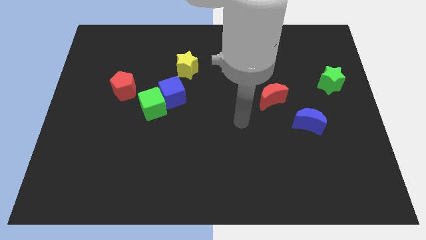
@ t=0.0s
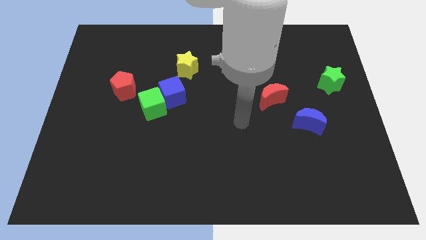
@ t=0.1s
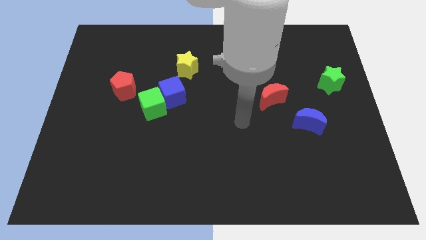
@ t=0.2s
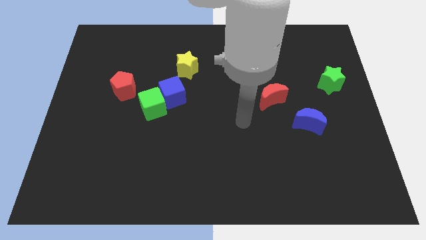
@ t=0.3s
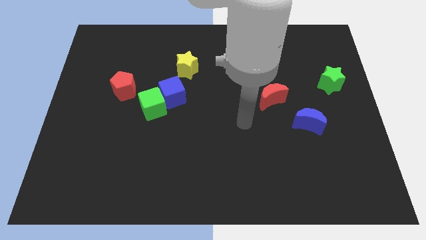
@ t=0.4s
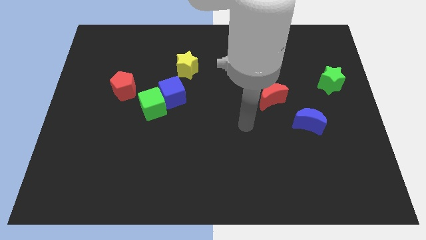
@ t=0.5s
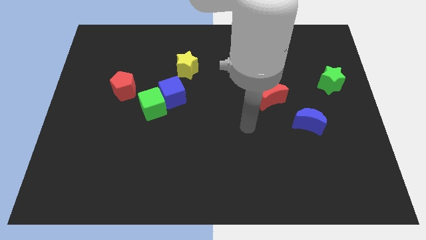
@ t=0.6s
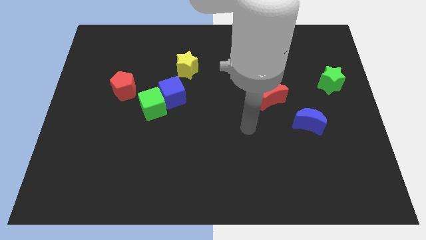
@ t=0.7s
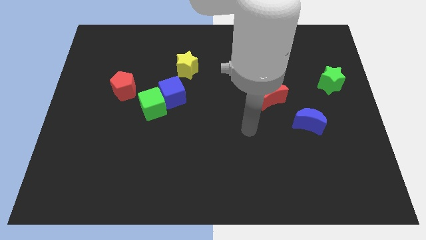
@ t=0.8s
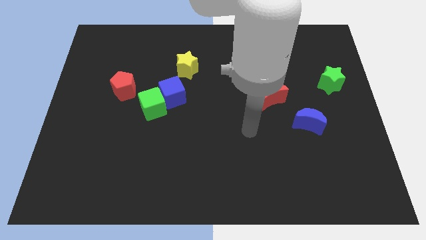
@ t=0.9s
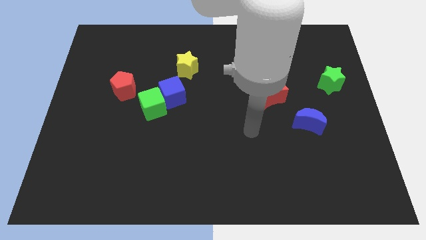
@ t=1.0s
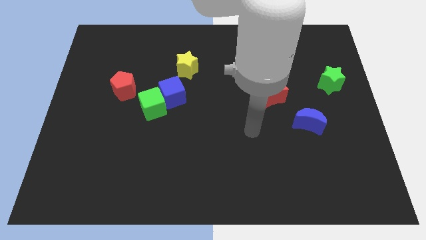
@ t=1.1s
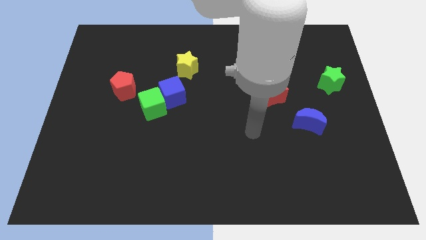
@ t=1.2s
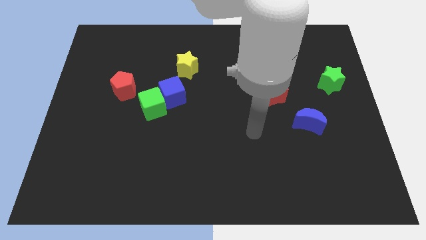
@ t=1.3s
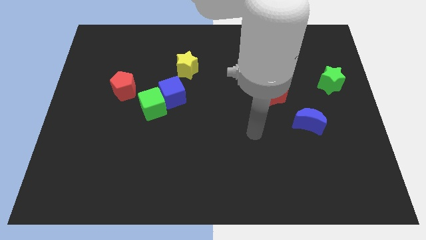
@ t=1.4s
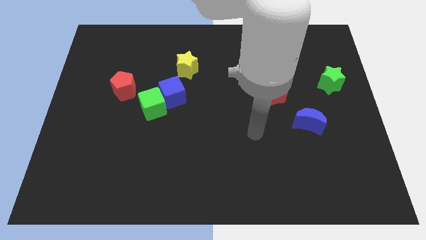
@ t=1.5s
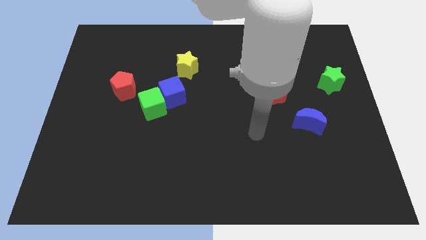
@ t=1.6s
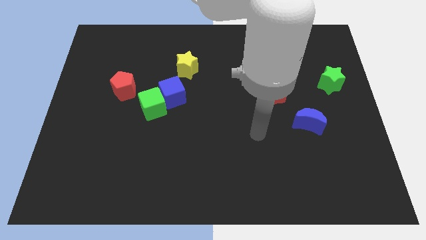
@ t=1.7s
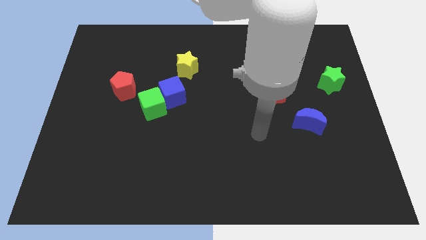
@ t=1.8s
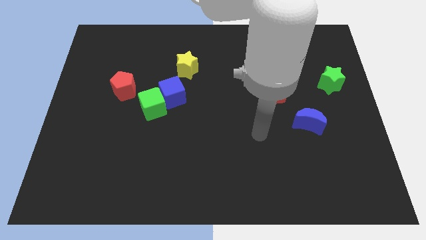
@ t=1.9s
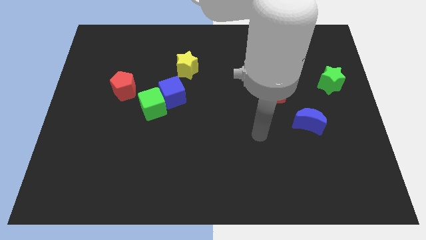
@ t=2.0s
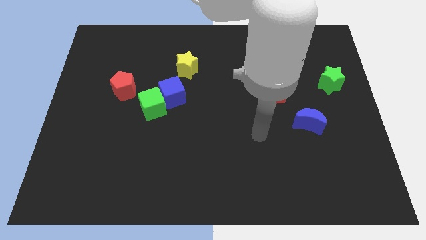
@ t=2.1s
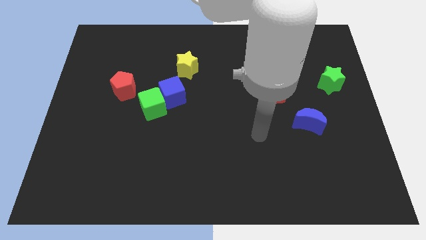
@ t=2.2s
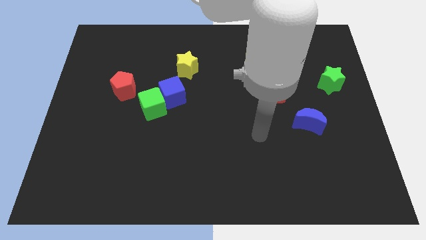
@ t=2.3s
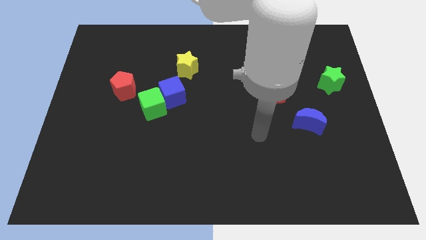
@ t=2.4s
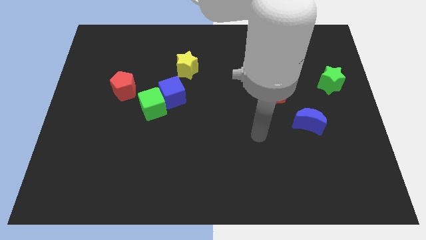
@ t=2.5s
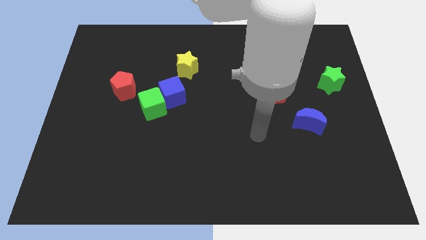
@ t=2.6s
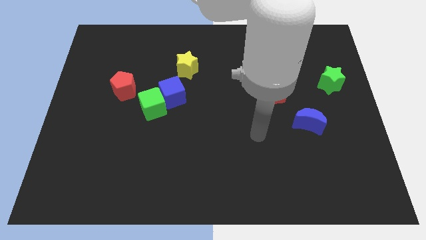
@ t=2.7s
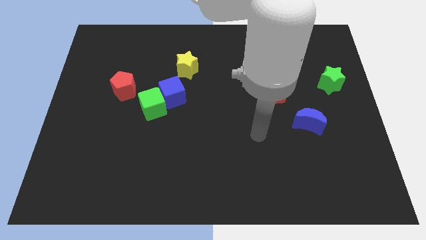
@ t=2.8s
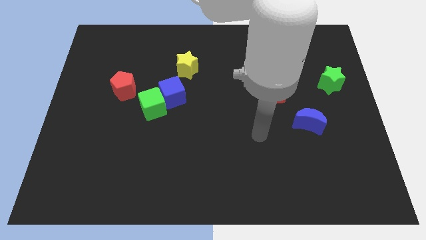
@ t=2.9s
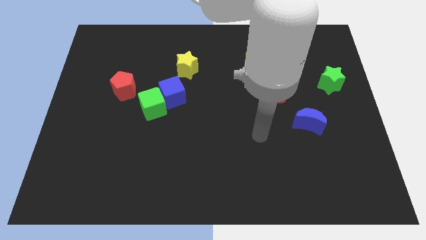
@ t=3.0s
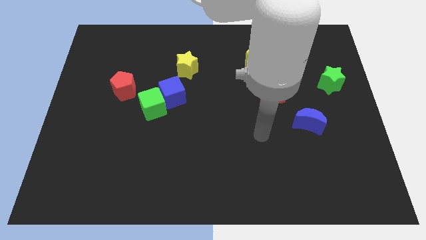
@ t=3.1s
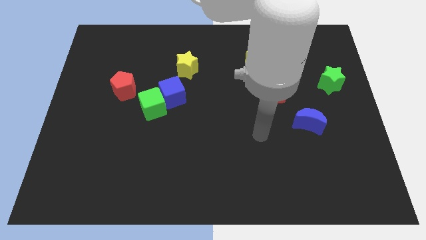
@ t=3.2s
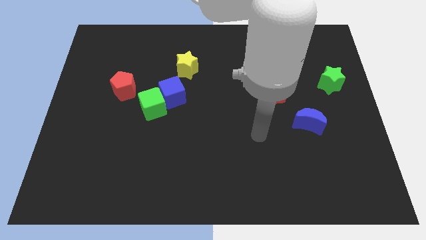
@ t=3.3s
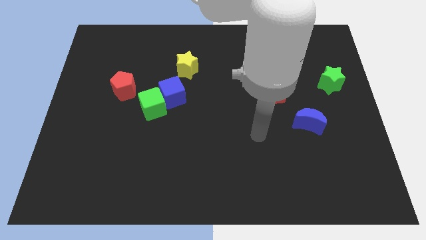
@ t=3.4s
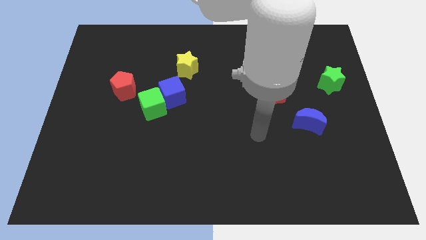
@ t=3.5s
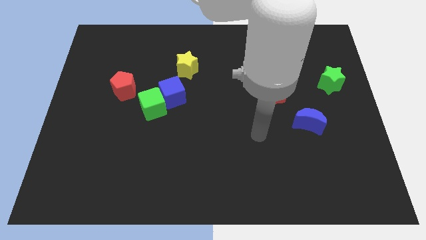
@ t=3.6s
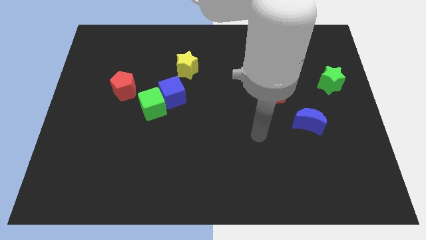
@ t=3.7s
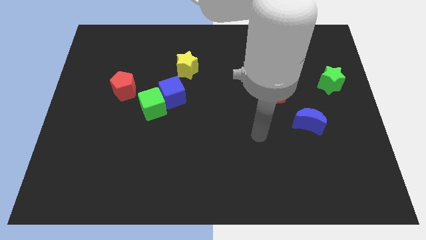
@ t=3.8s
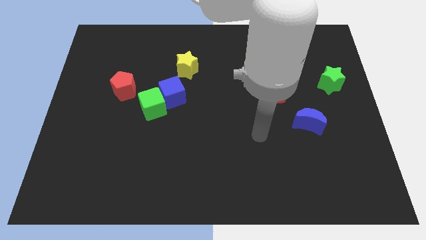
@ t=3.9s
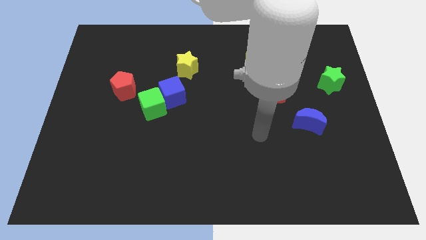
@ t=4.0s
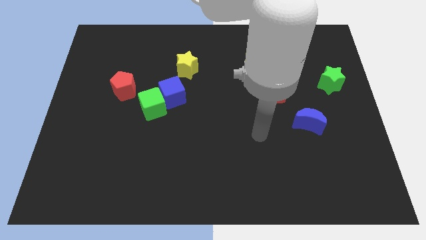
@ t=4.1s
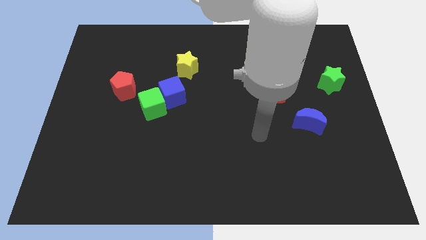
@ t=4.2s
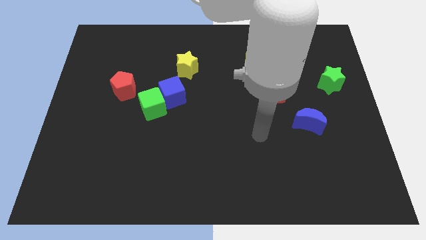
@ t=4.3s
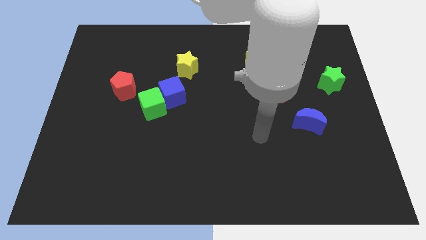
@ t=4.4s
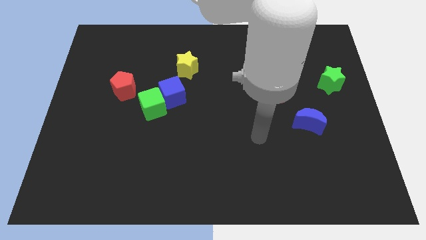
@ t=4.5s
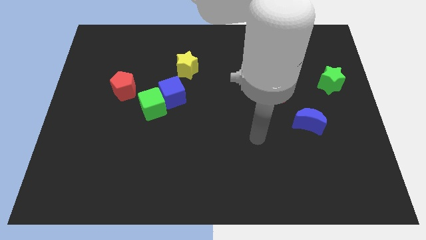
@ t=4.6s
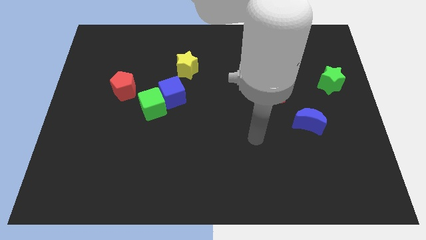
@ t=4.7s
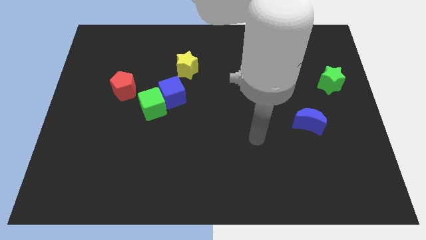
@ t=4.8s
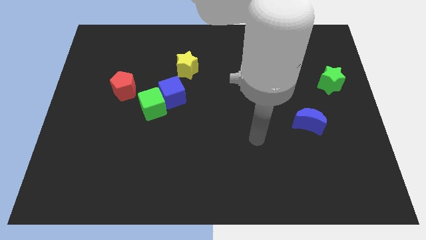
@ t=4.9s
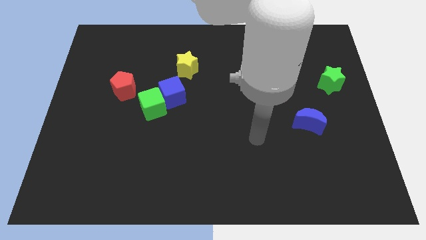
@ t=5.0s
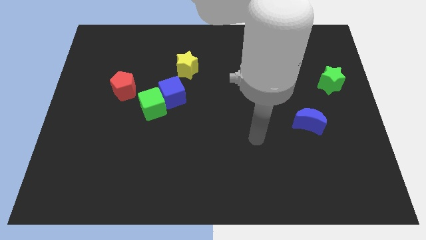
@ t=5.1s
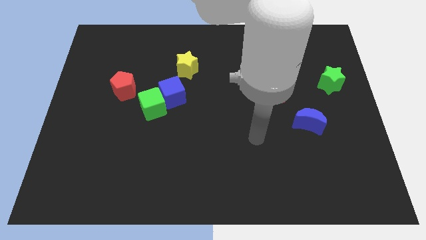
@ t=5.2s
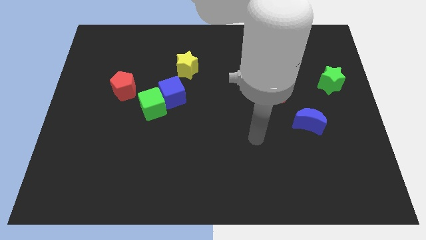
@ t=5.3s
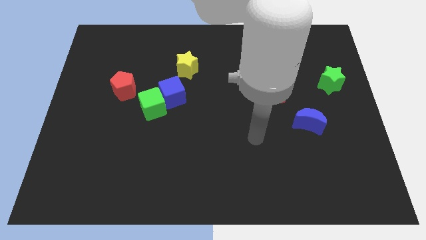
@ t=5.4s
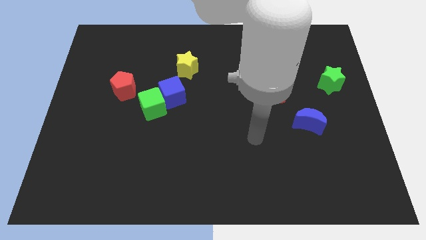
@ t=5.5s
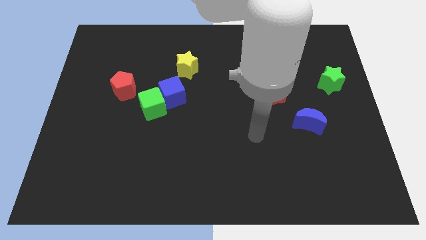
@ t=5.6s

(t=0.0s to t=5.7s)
move the arm towards the red crescent

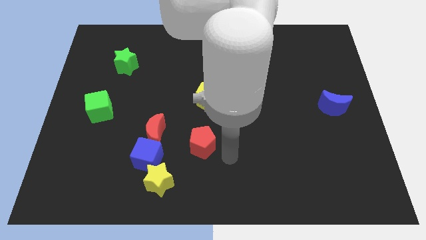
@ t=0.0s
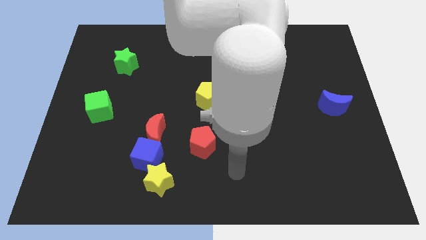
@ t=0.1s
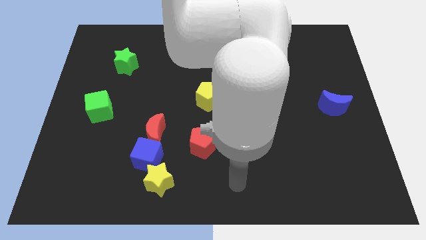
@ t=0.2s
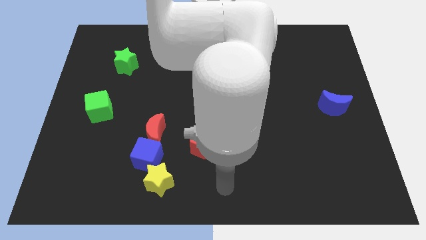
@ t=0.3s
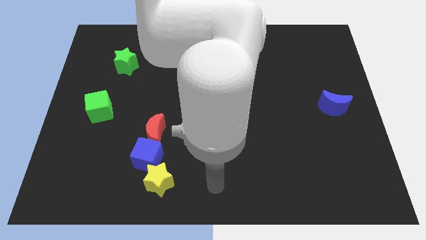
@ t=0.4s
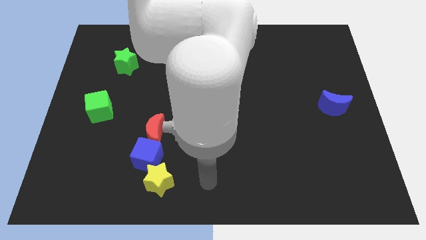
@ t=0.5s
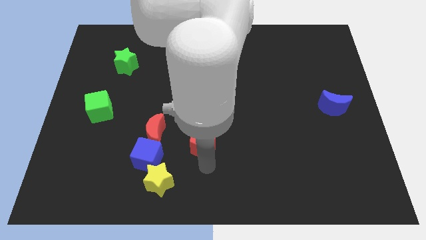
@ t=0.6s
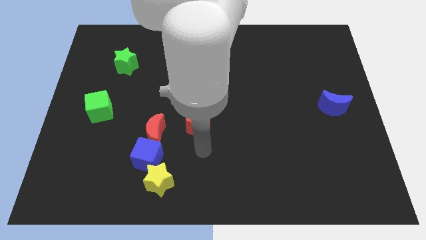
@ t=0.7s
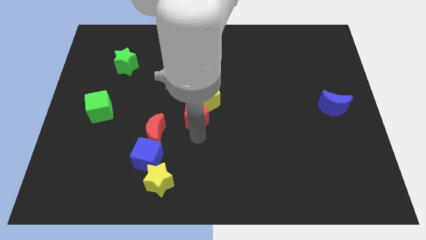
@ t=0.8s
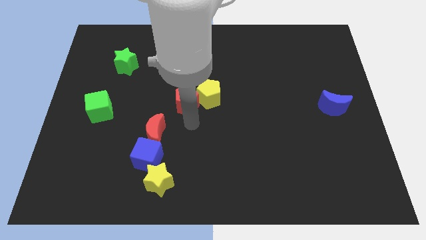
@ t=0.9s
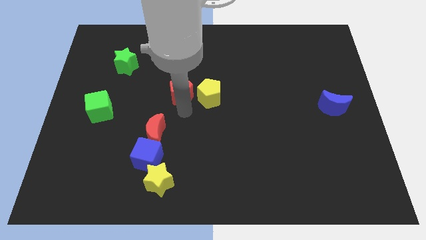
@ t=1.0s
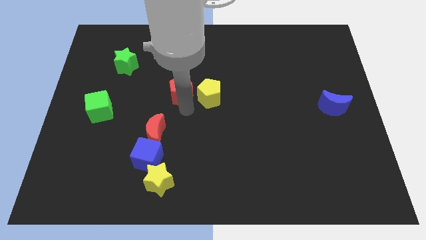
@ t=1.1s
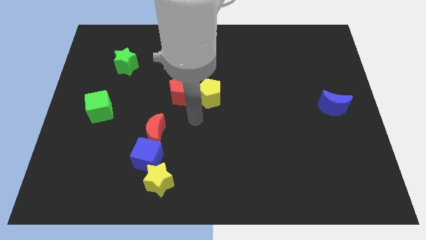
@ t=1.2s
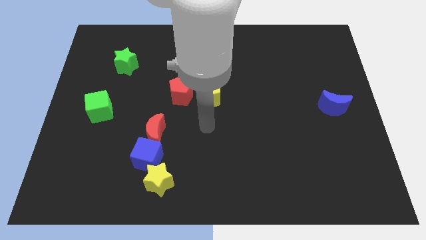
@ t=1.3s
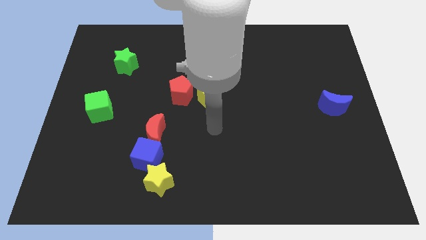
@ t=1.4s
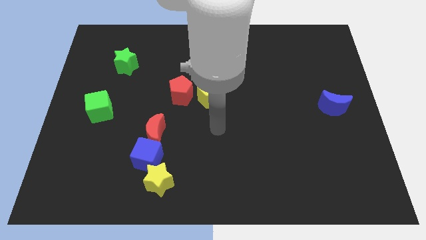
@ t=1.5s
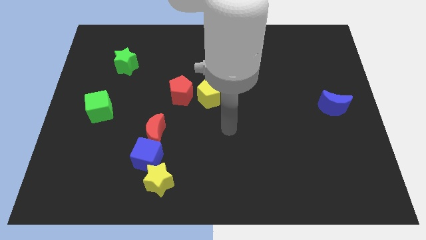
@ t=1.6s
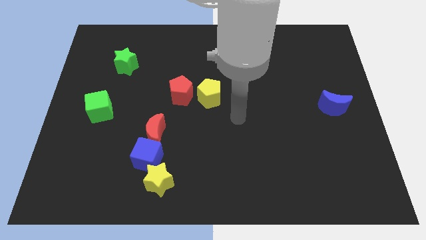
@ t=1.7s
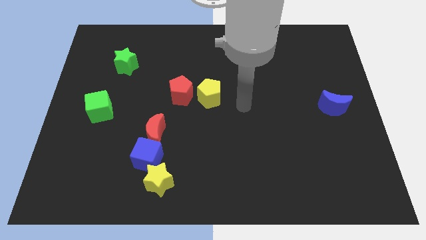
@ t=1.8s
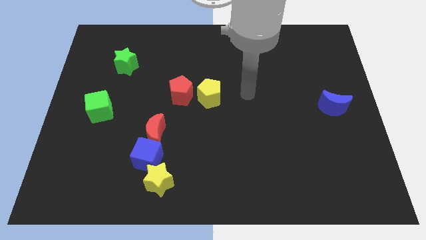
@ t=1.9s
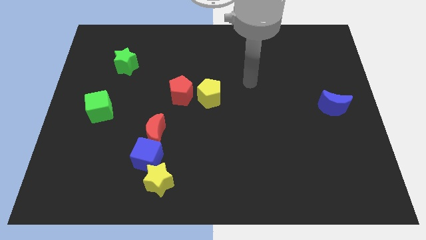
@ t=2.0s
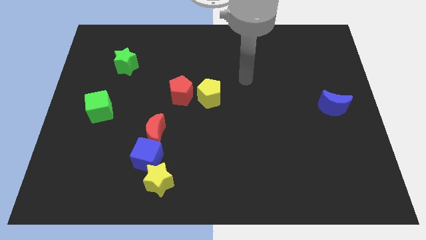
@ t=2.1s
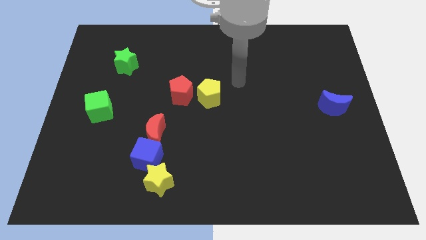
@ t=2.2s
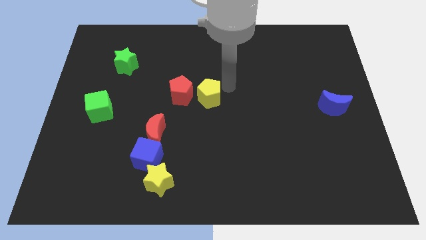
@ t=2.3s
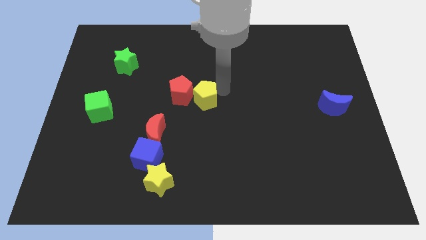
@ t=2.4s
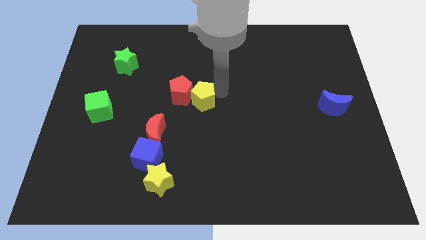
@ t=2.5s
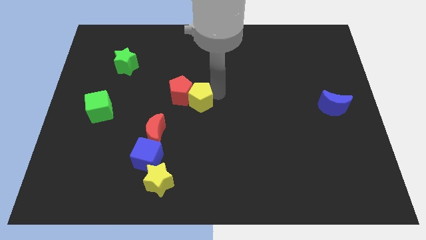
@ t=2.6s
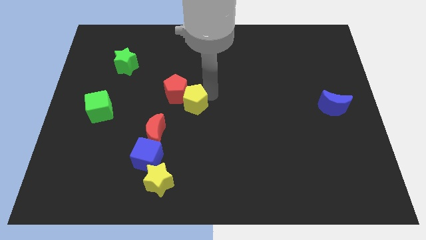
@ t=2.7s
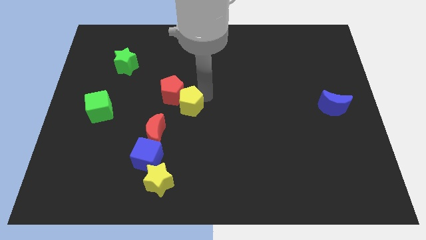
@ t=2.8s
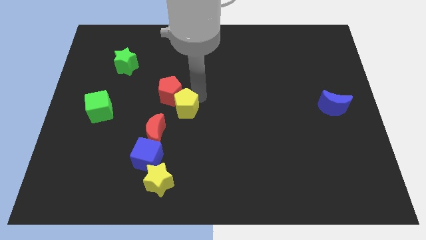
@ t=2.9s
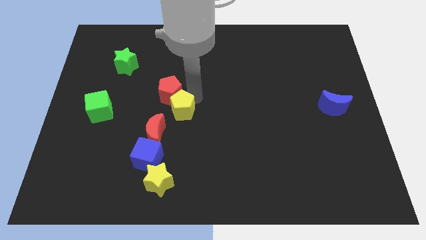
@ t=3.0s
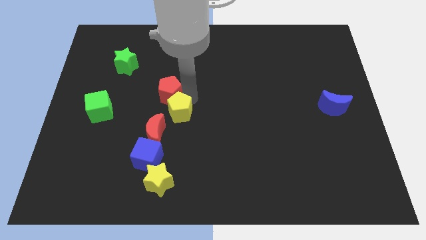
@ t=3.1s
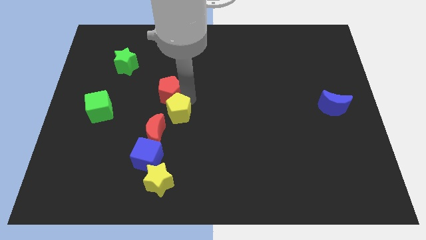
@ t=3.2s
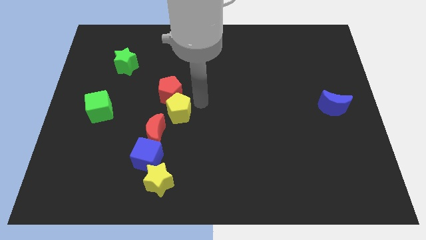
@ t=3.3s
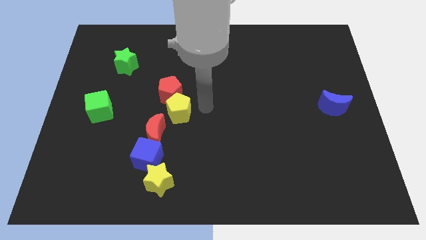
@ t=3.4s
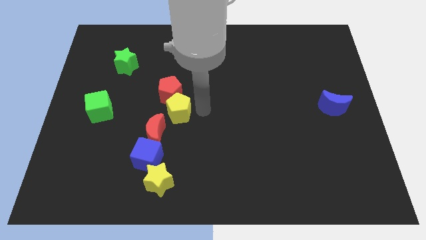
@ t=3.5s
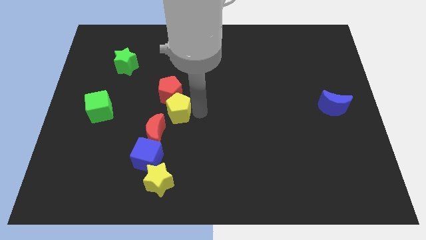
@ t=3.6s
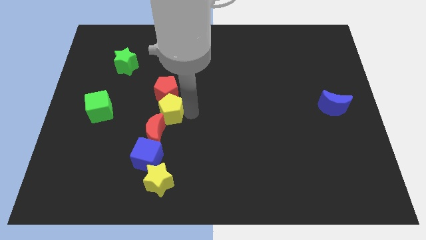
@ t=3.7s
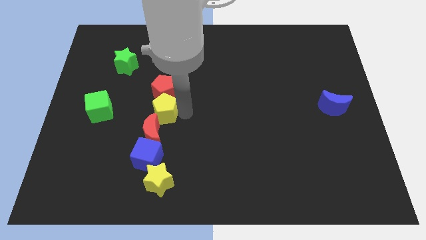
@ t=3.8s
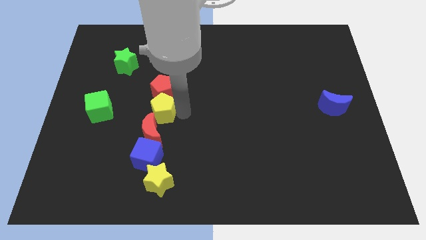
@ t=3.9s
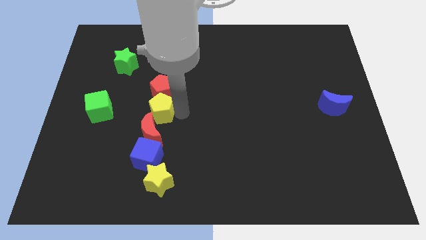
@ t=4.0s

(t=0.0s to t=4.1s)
push yellow pentagon in between red blocks
